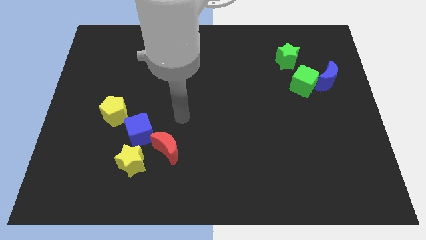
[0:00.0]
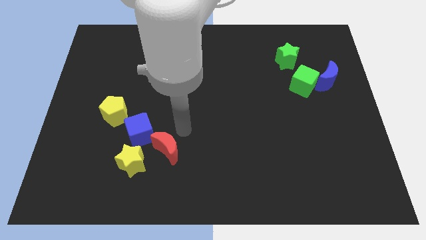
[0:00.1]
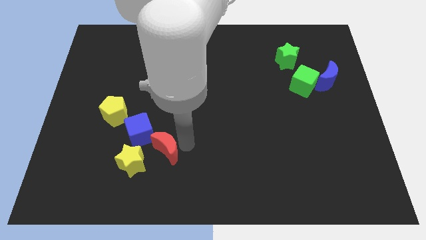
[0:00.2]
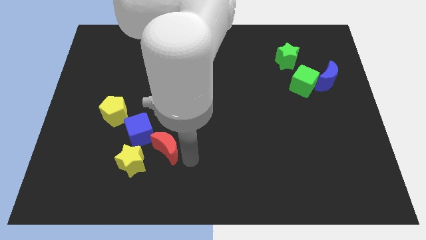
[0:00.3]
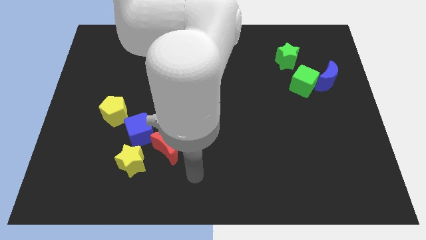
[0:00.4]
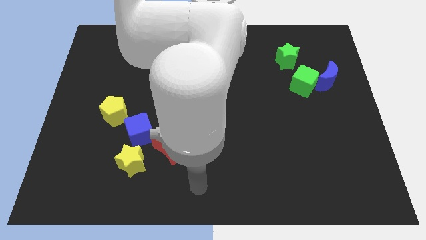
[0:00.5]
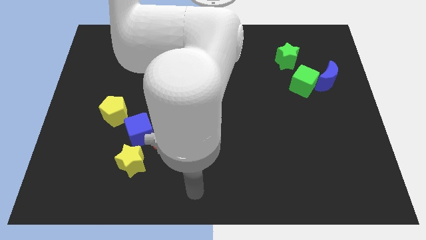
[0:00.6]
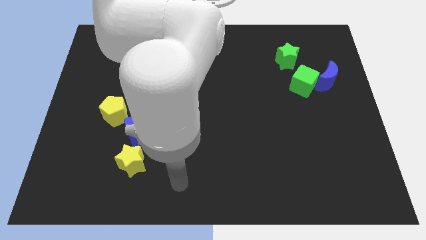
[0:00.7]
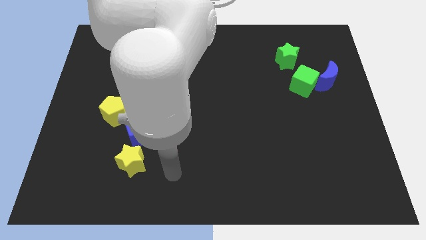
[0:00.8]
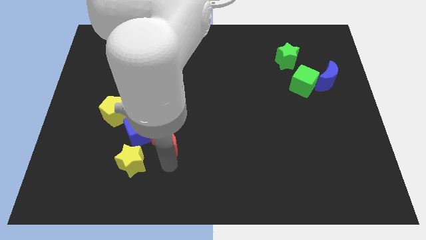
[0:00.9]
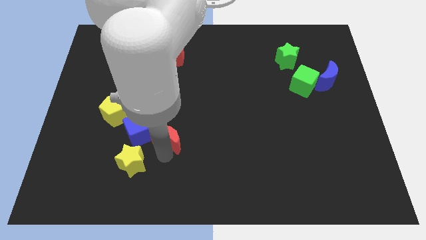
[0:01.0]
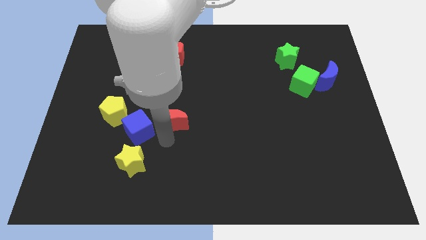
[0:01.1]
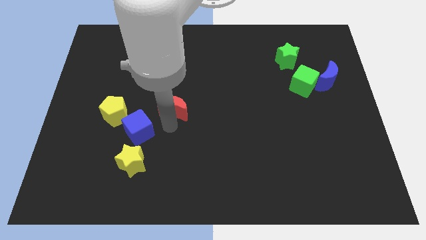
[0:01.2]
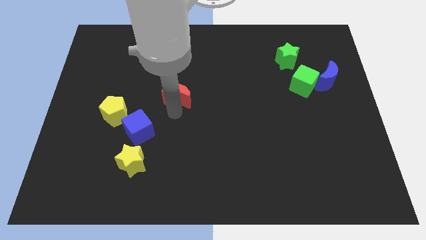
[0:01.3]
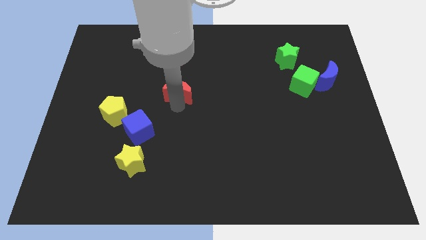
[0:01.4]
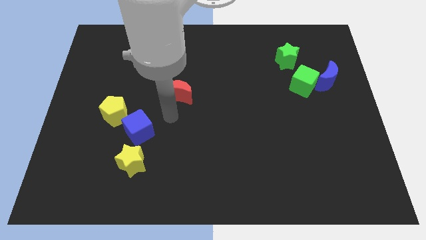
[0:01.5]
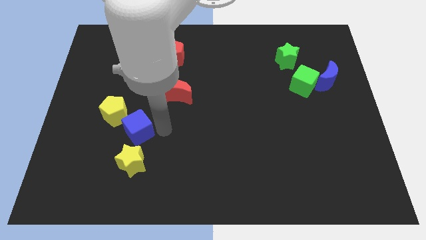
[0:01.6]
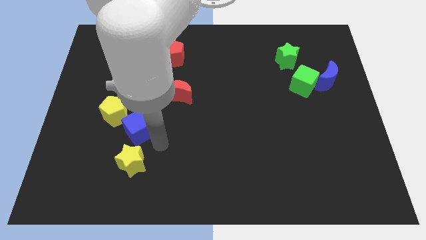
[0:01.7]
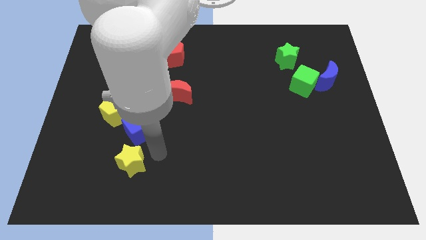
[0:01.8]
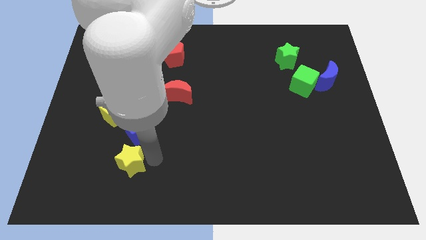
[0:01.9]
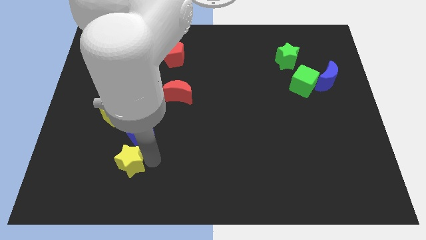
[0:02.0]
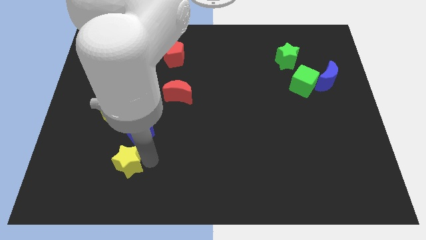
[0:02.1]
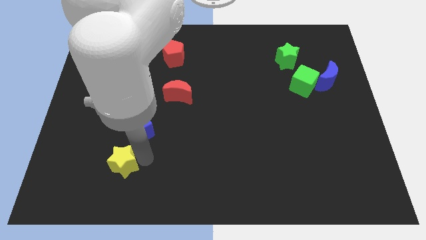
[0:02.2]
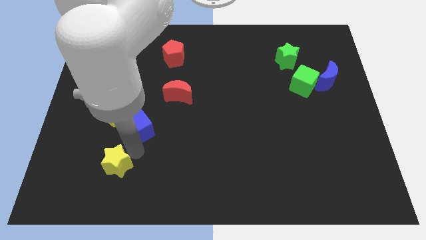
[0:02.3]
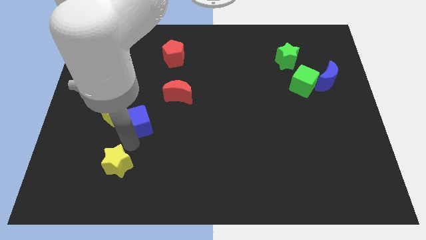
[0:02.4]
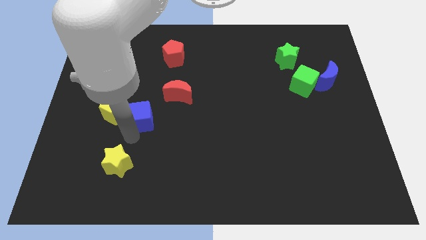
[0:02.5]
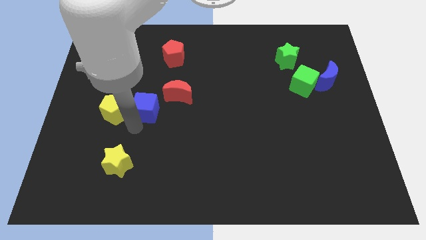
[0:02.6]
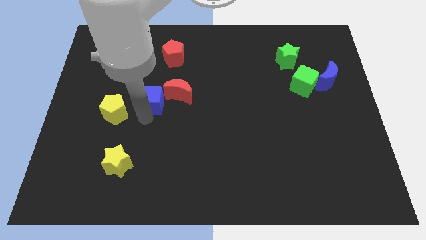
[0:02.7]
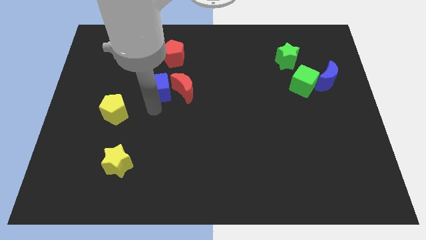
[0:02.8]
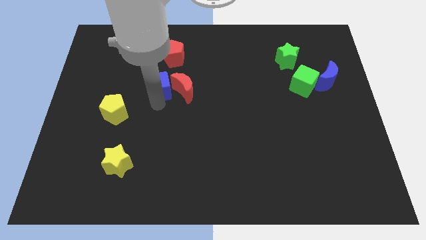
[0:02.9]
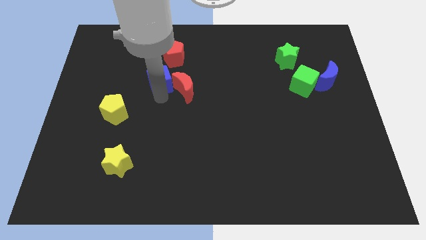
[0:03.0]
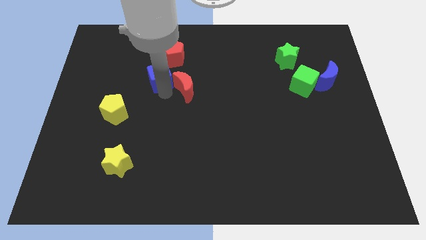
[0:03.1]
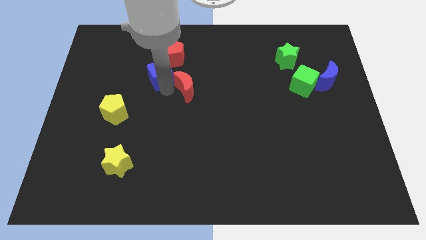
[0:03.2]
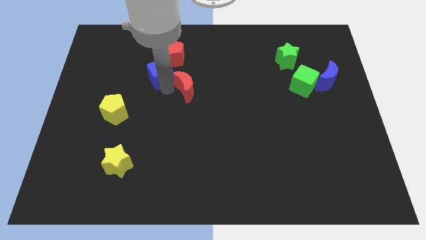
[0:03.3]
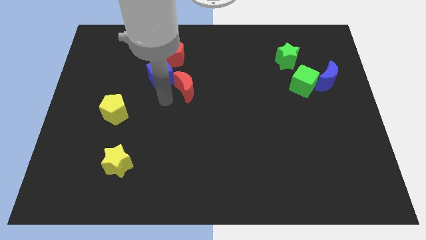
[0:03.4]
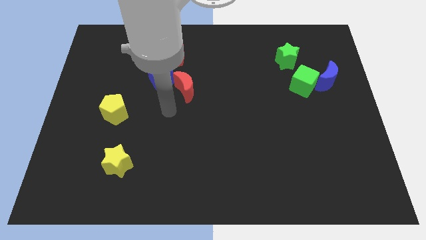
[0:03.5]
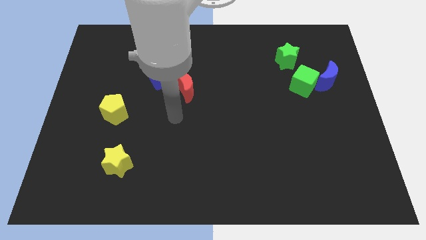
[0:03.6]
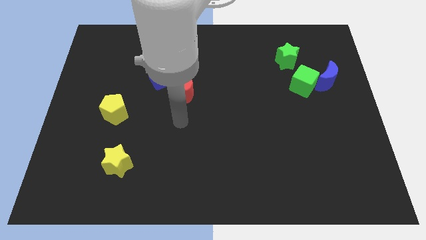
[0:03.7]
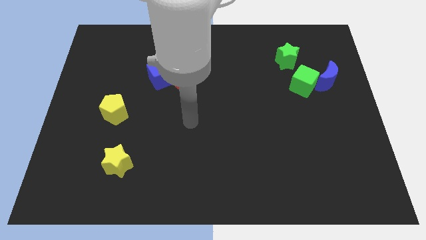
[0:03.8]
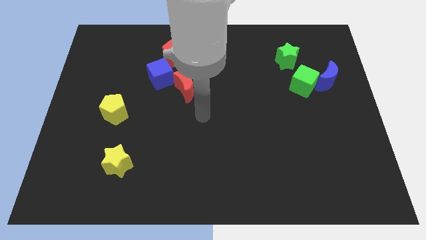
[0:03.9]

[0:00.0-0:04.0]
push blue cube towards red pentagon

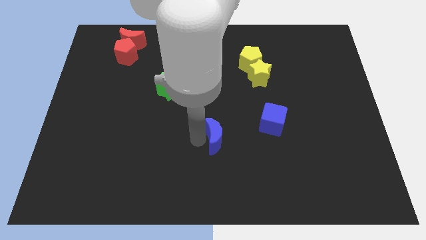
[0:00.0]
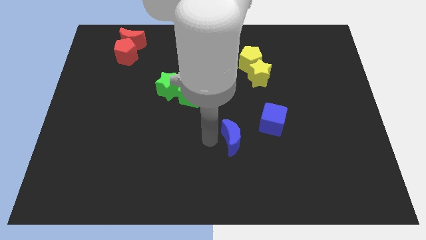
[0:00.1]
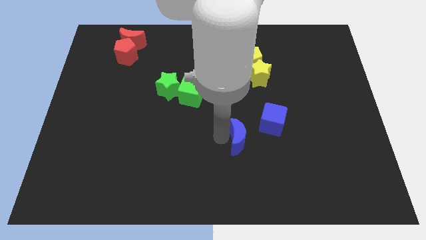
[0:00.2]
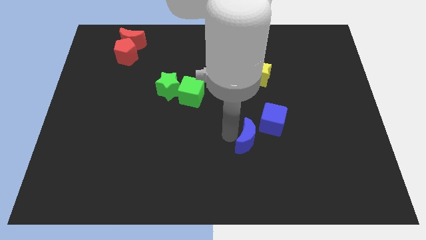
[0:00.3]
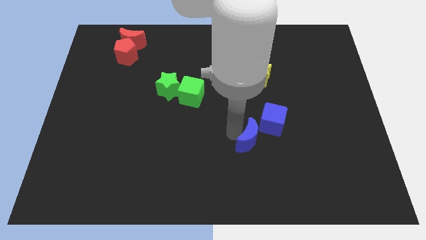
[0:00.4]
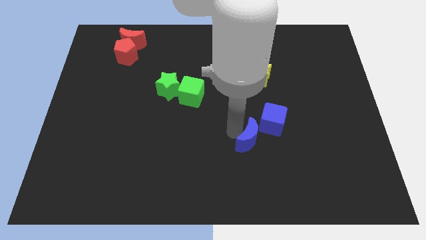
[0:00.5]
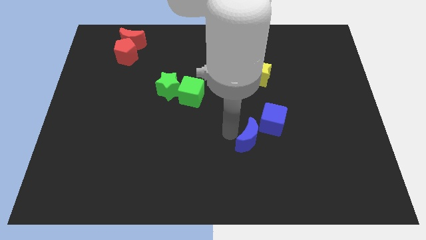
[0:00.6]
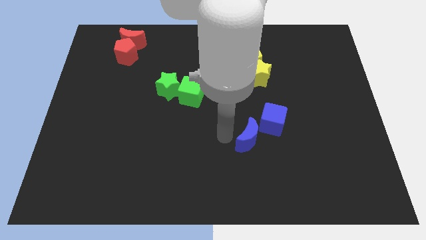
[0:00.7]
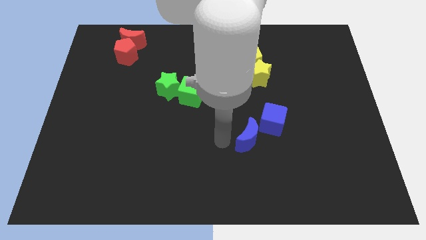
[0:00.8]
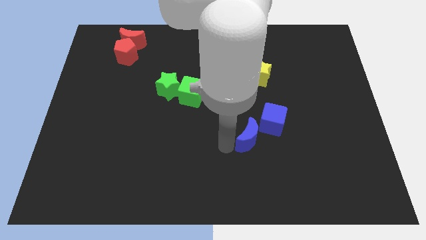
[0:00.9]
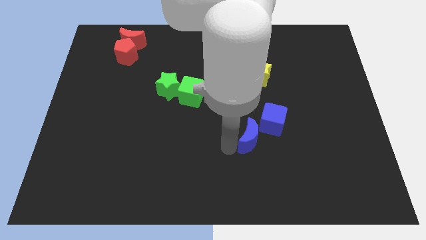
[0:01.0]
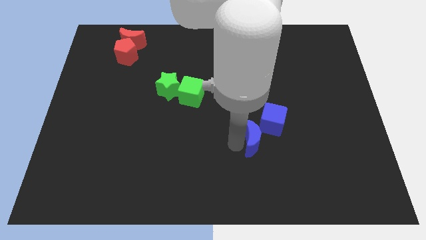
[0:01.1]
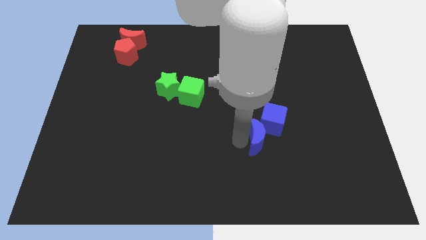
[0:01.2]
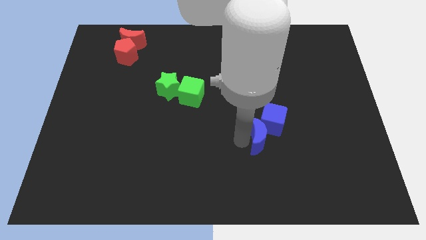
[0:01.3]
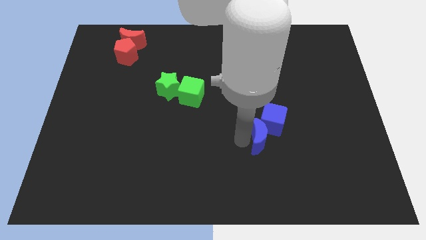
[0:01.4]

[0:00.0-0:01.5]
push the blue moon into the blue cube

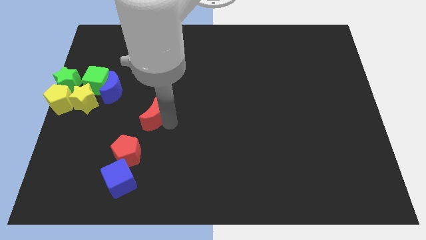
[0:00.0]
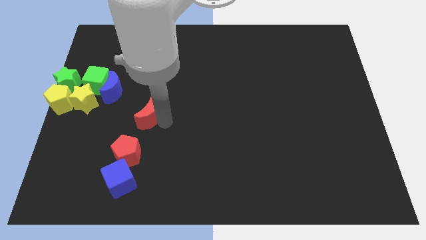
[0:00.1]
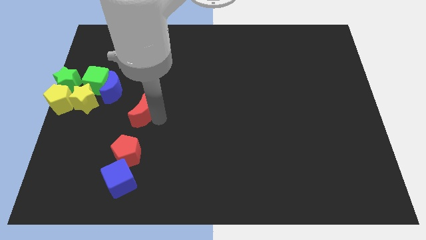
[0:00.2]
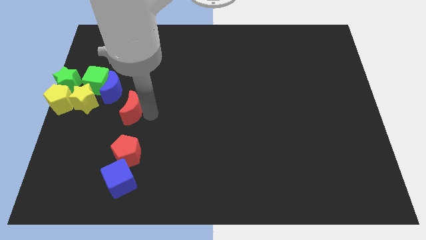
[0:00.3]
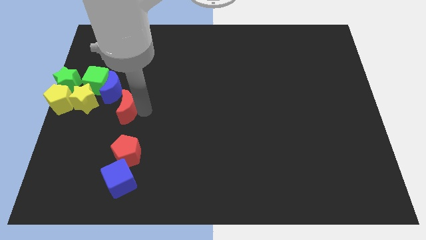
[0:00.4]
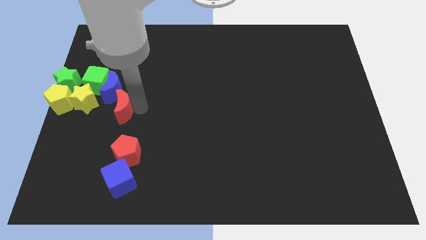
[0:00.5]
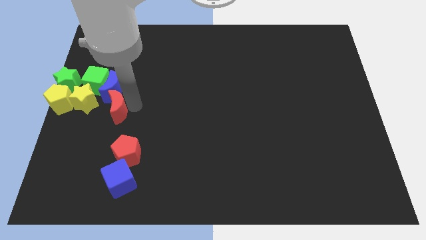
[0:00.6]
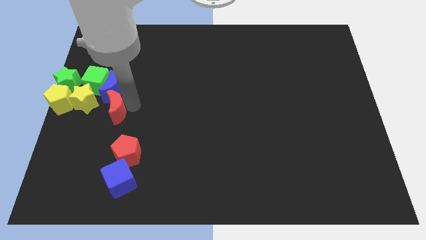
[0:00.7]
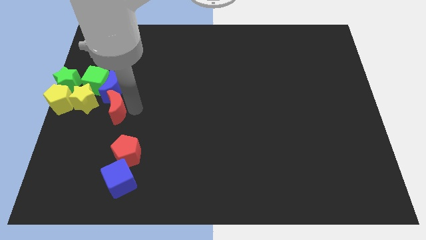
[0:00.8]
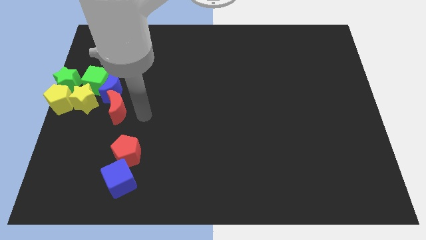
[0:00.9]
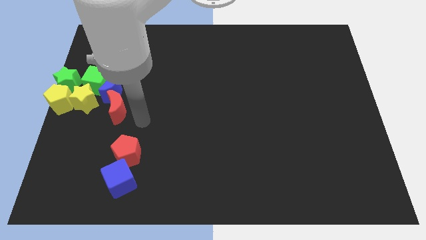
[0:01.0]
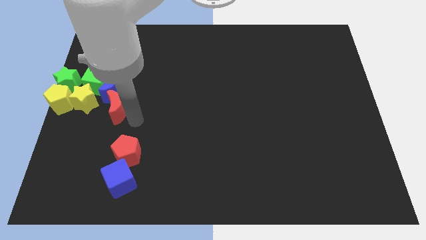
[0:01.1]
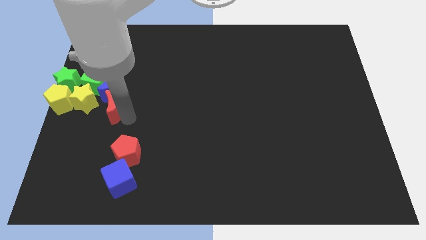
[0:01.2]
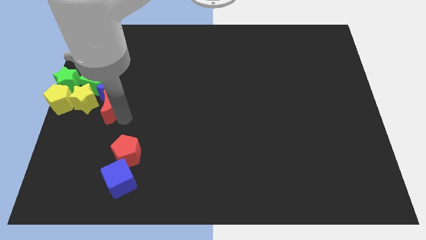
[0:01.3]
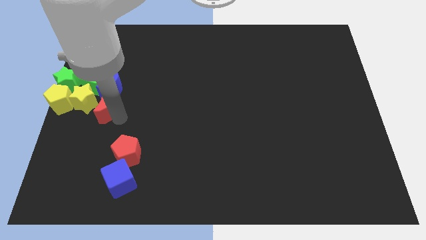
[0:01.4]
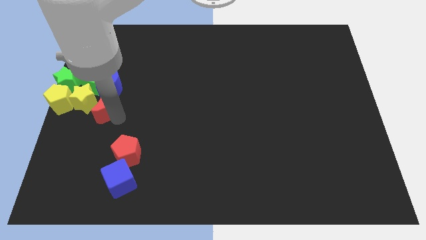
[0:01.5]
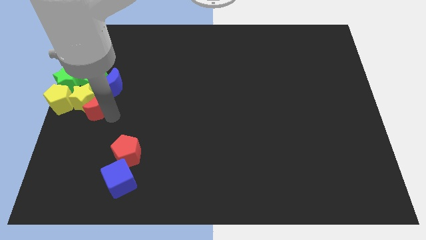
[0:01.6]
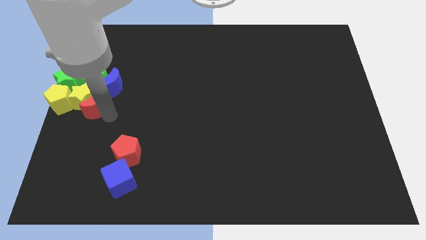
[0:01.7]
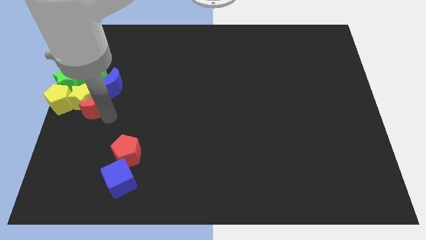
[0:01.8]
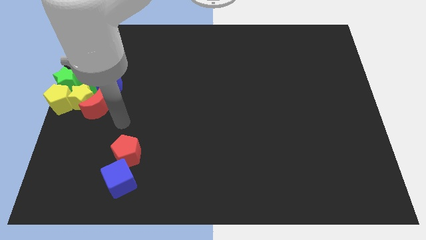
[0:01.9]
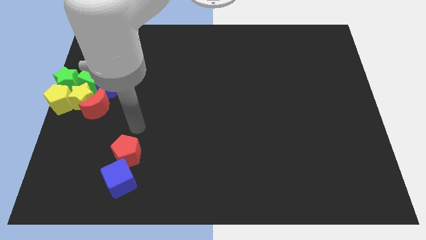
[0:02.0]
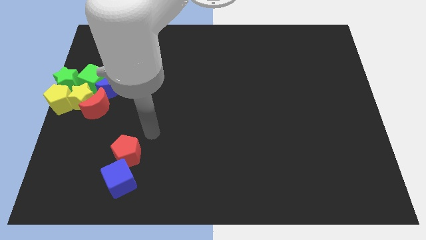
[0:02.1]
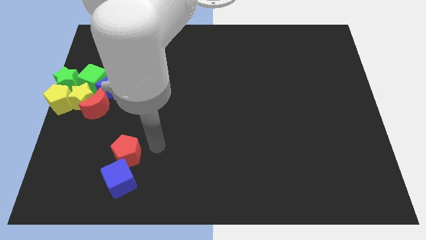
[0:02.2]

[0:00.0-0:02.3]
push red moon into yellow star

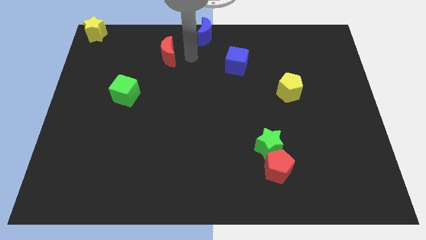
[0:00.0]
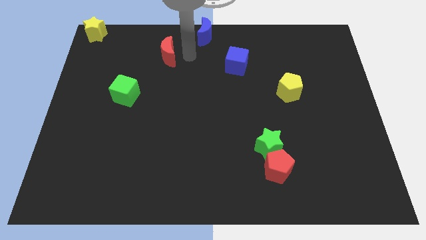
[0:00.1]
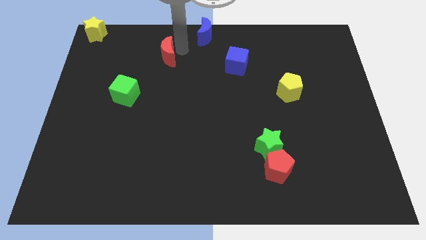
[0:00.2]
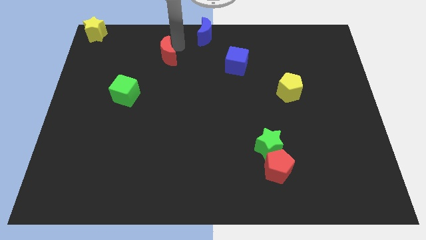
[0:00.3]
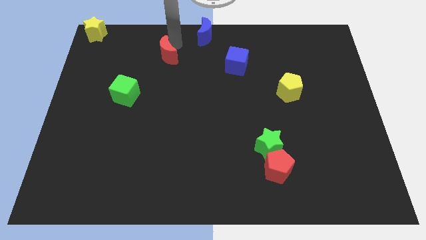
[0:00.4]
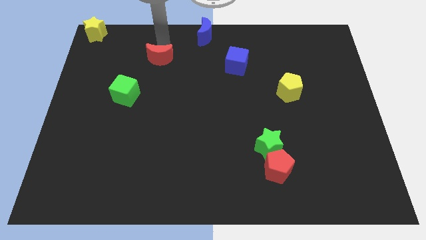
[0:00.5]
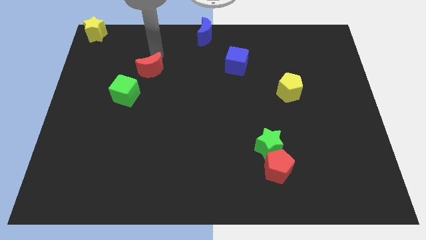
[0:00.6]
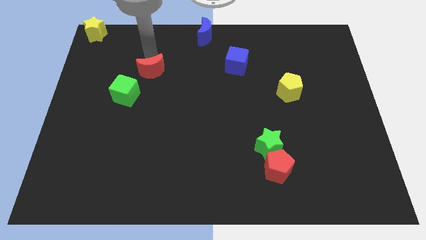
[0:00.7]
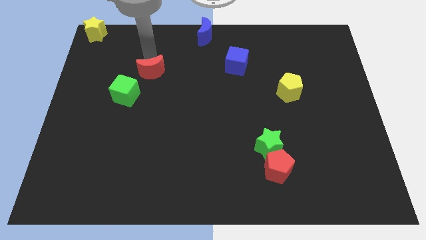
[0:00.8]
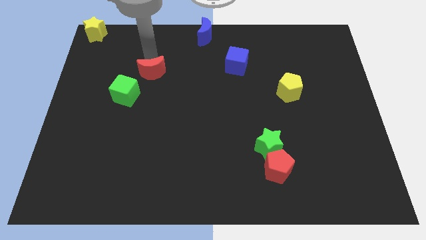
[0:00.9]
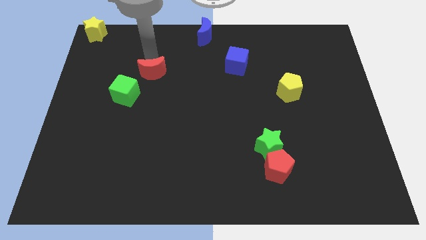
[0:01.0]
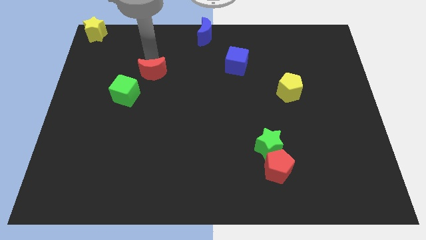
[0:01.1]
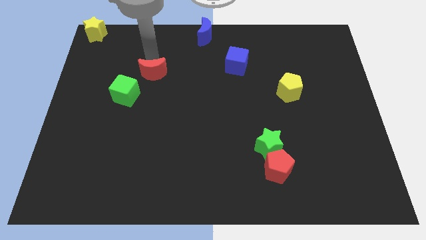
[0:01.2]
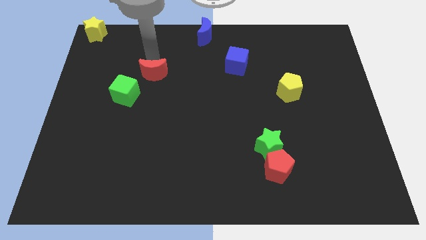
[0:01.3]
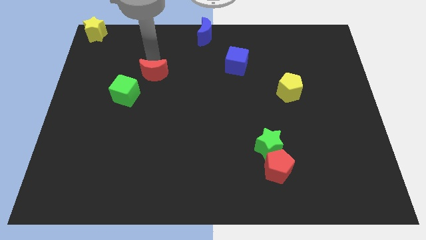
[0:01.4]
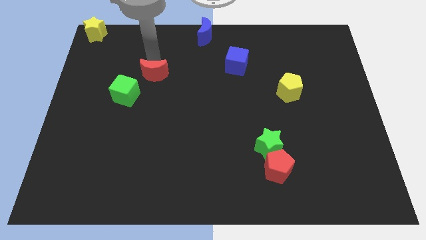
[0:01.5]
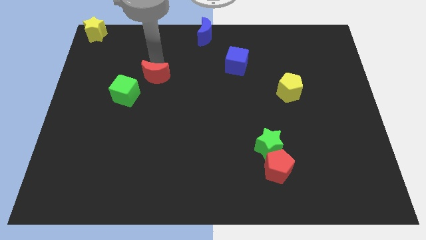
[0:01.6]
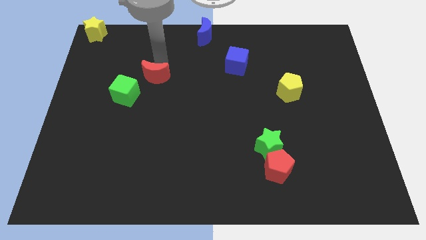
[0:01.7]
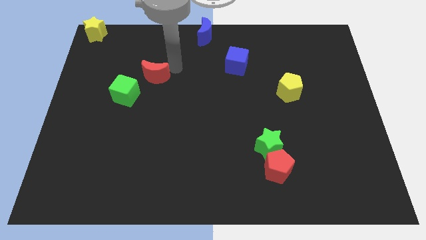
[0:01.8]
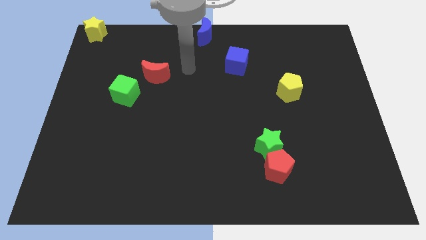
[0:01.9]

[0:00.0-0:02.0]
push the red moon diagonal to the green cube
